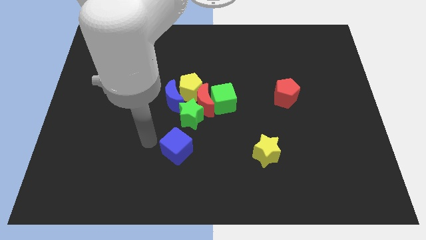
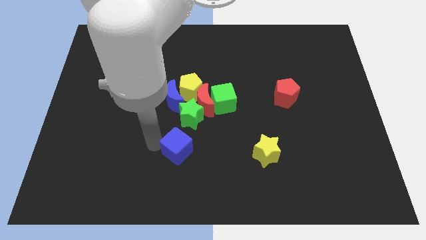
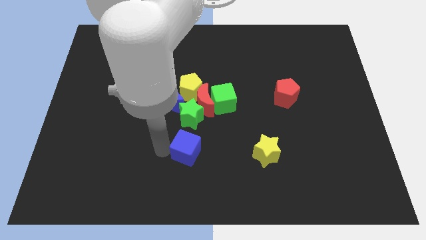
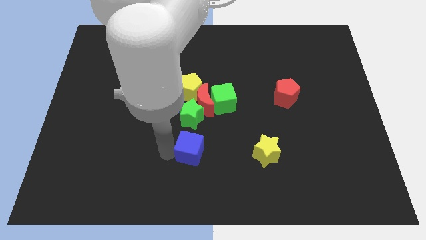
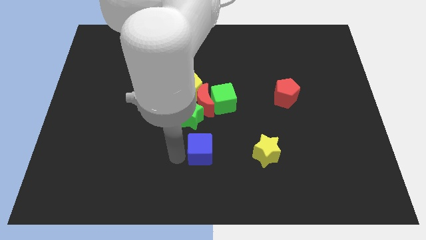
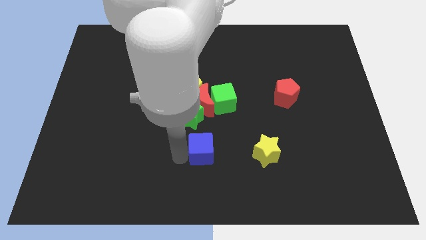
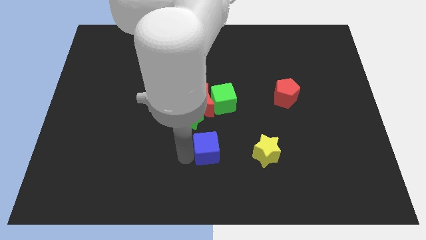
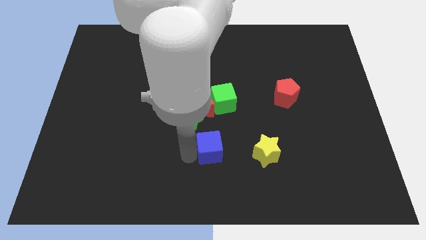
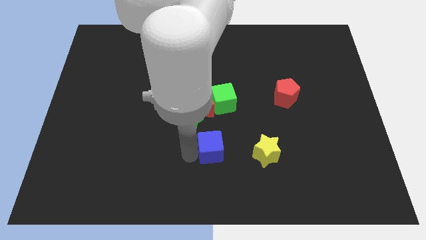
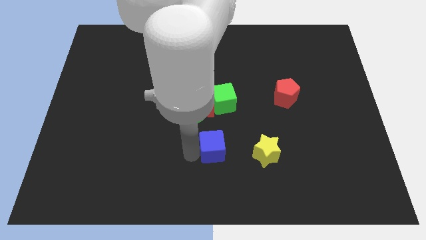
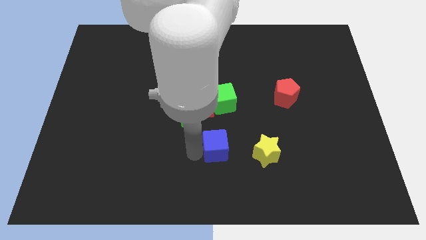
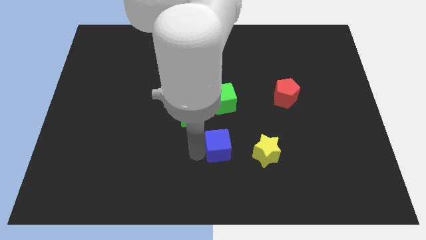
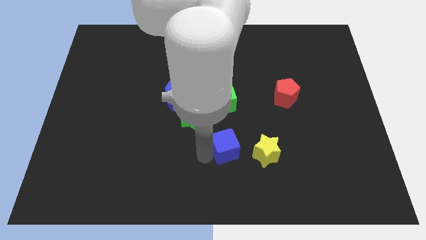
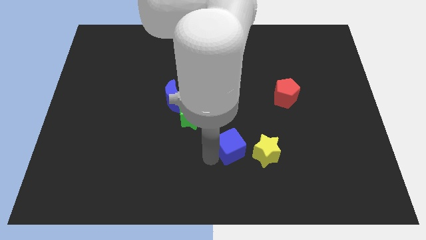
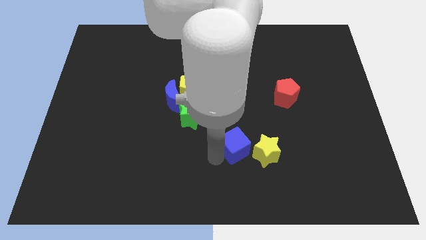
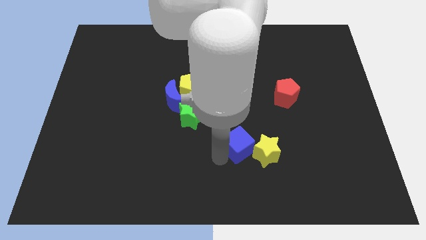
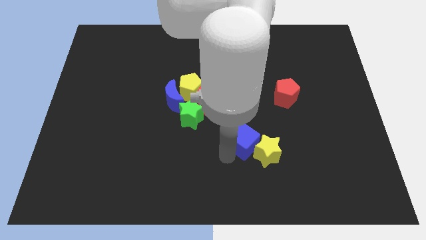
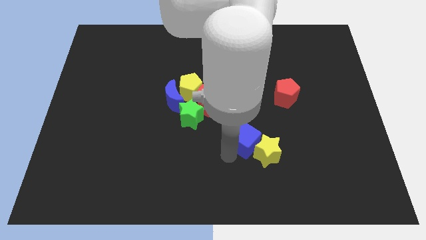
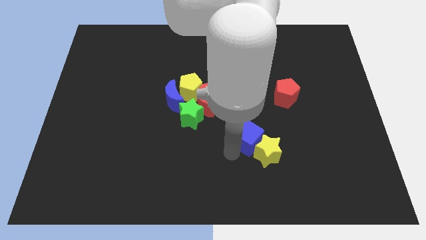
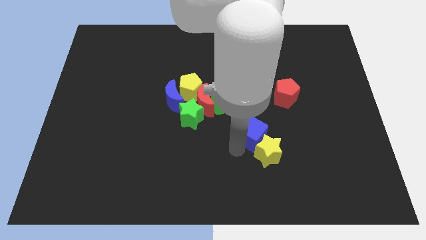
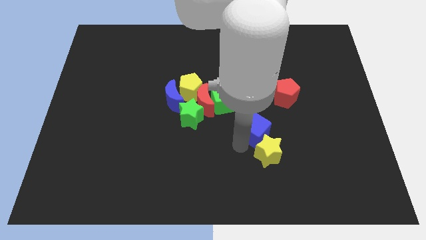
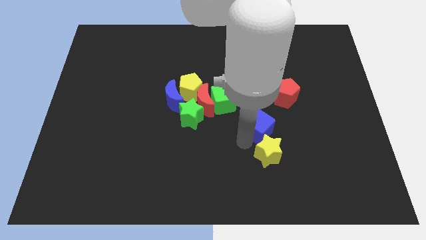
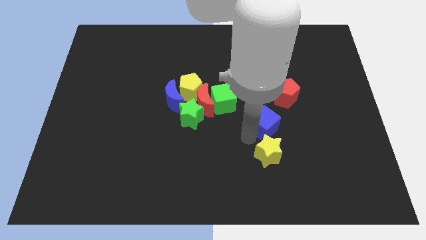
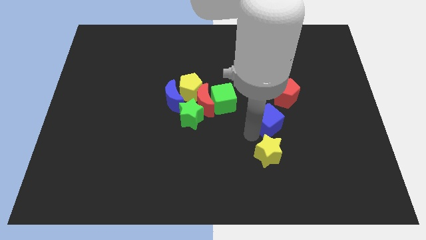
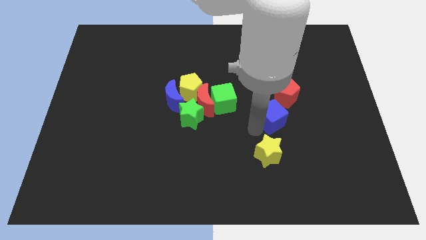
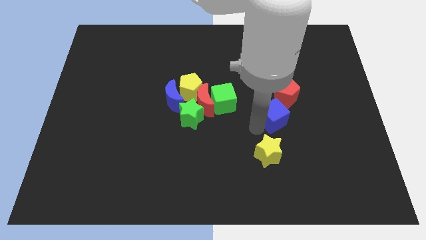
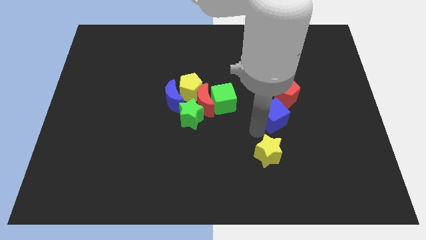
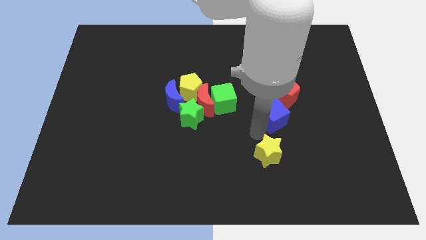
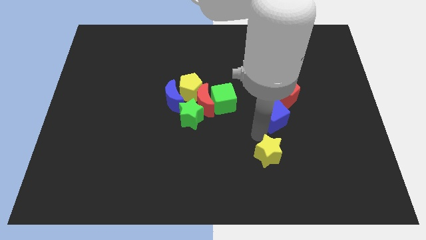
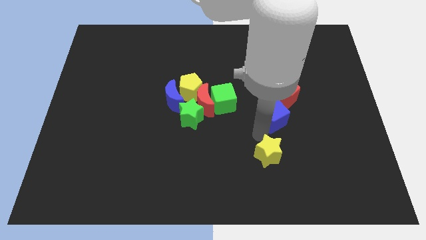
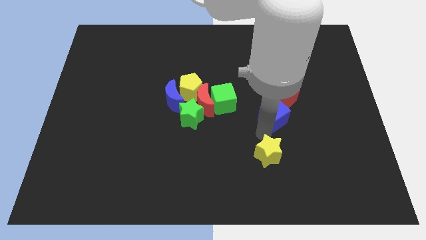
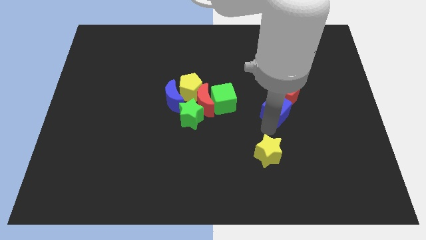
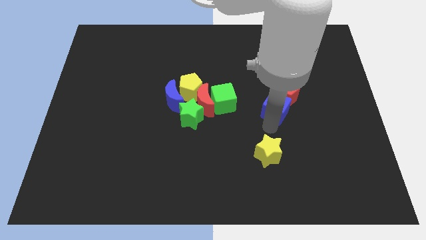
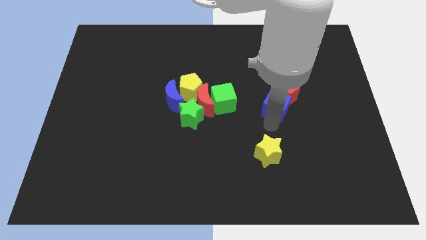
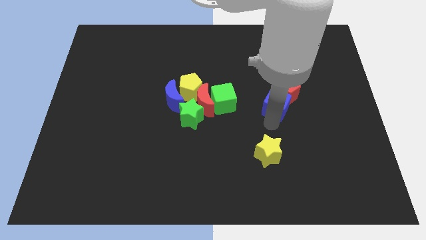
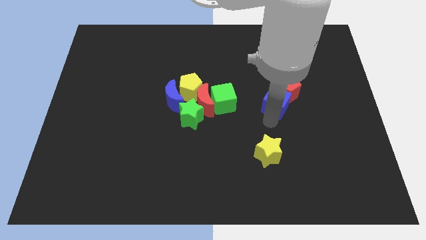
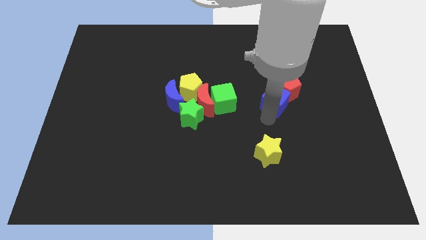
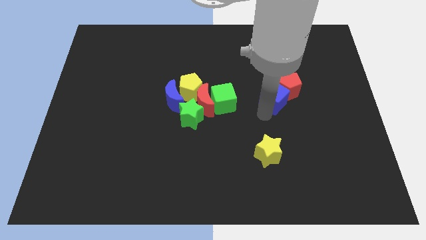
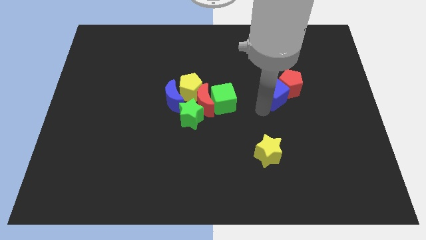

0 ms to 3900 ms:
move the blue cube into the red pentagon

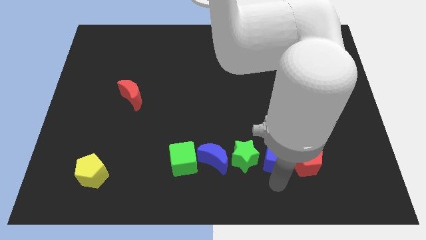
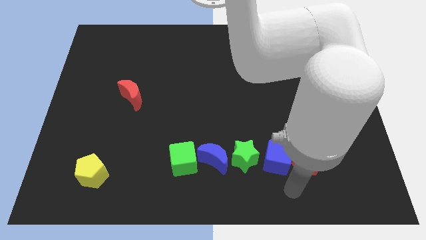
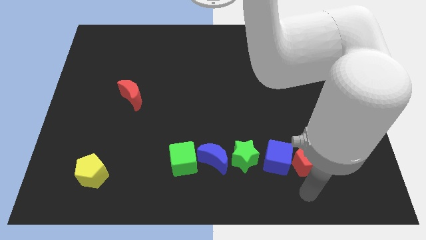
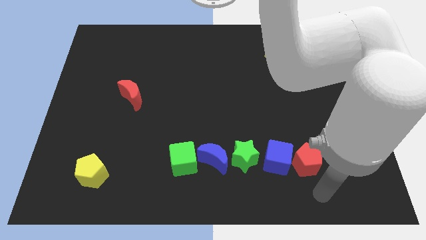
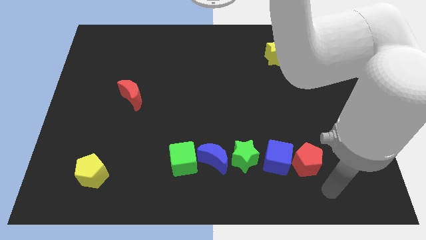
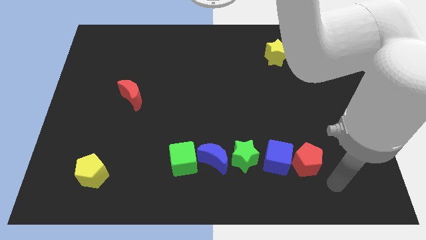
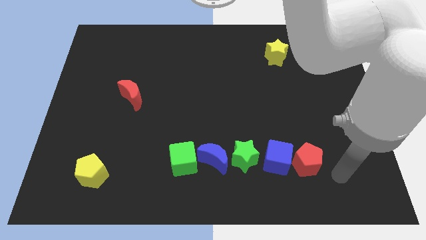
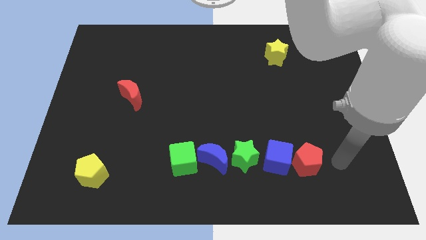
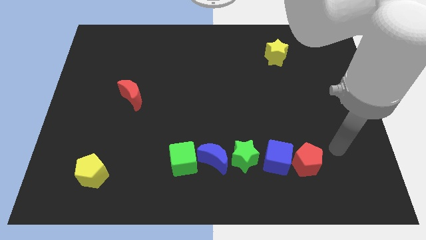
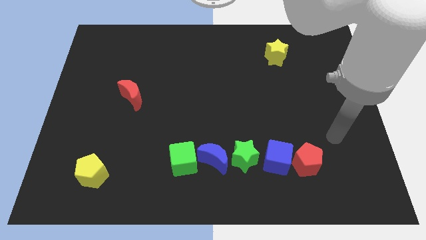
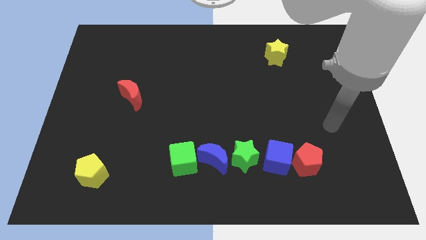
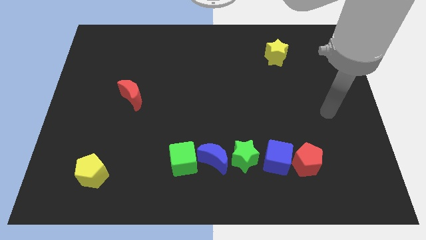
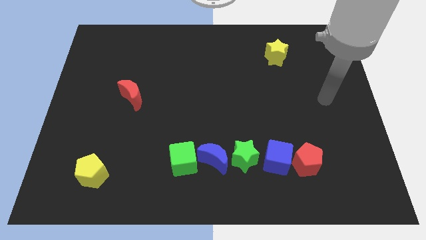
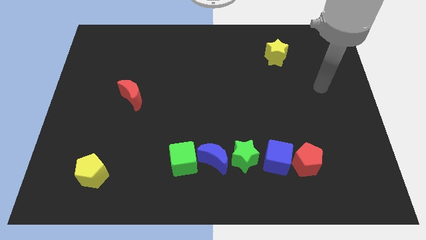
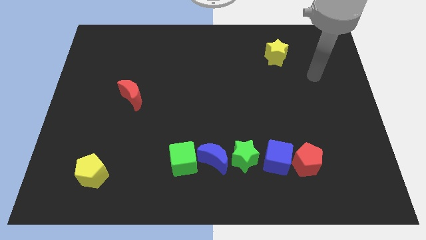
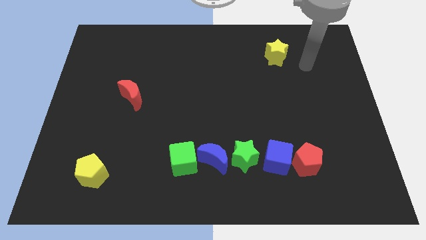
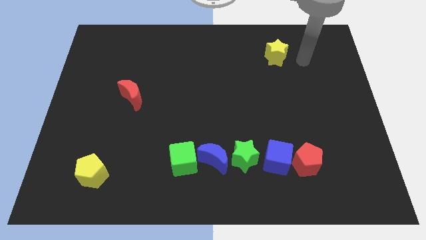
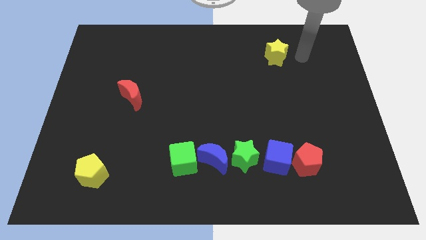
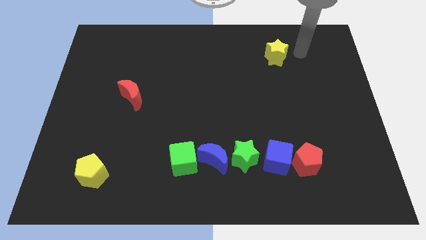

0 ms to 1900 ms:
move the arm near to the yellow star

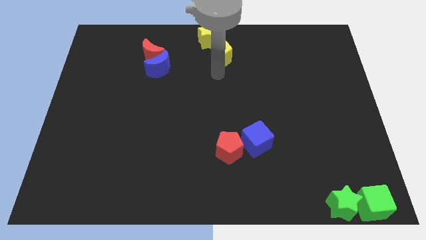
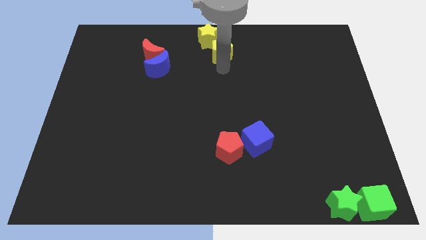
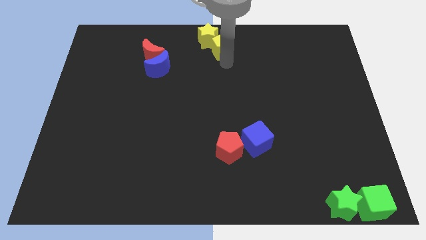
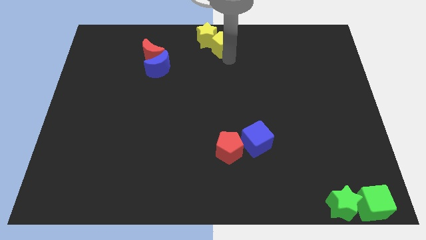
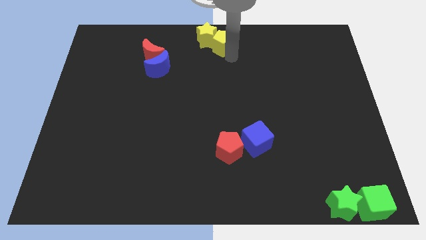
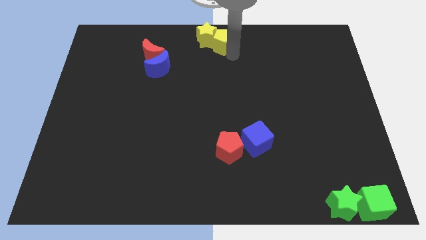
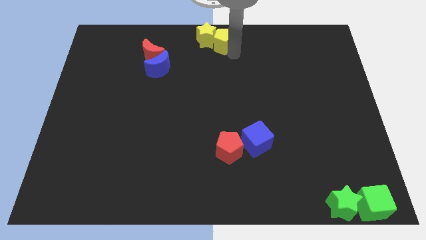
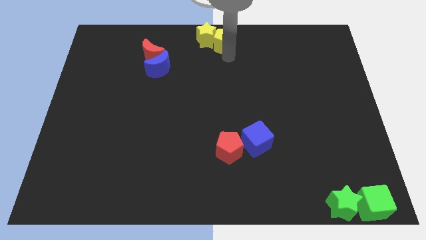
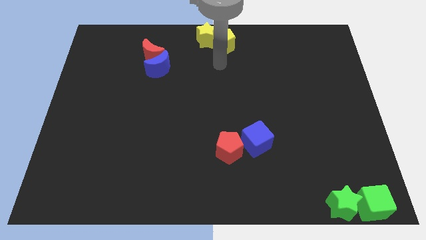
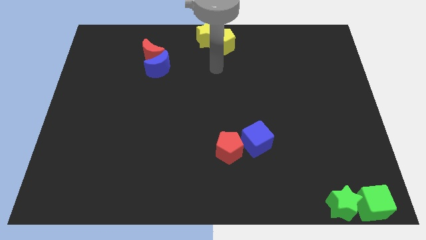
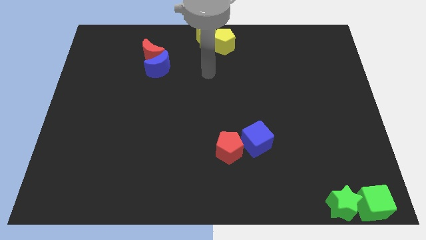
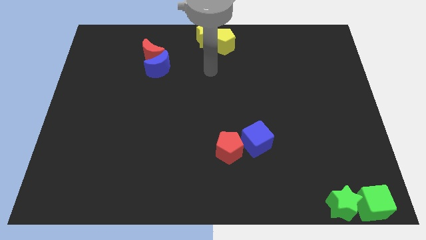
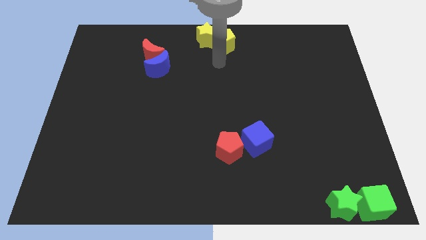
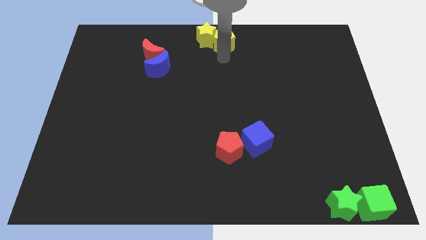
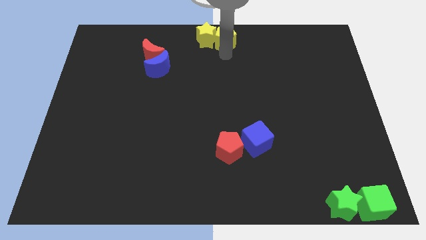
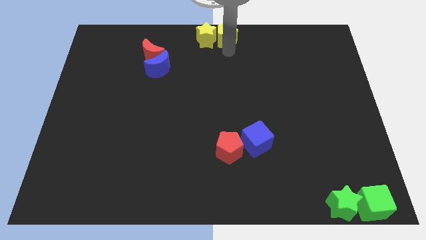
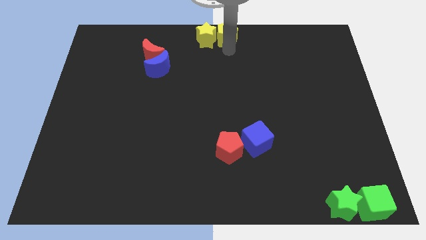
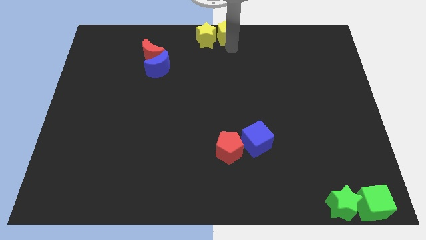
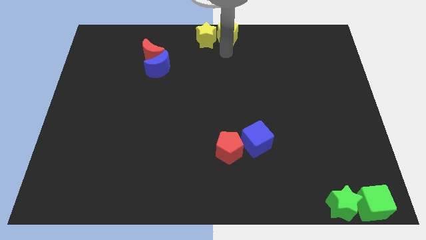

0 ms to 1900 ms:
place the yellow pentagon right to the yellow star

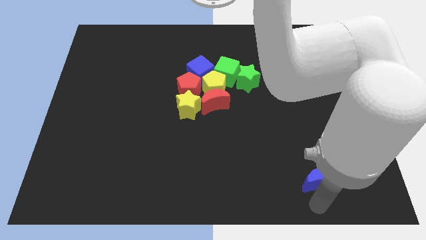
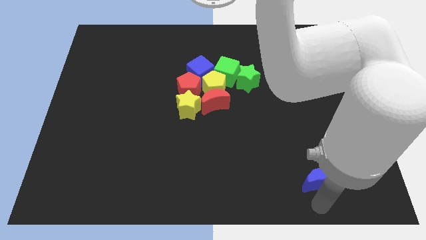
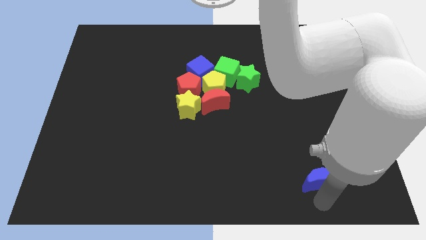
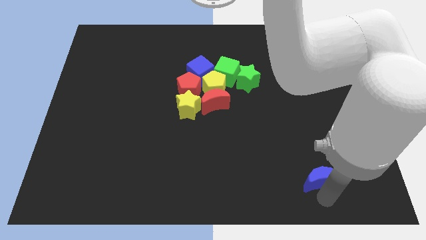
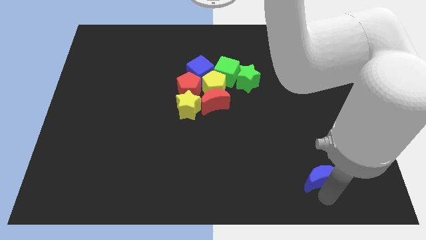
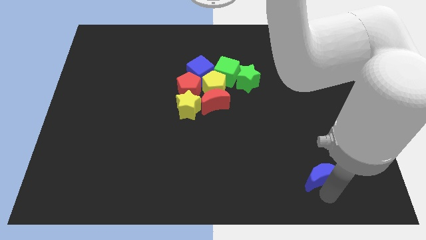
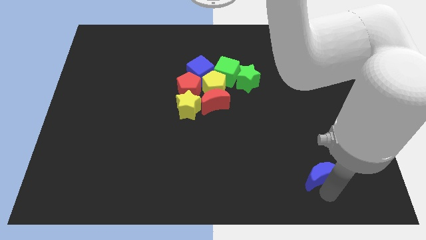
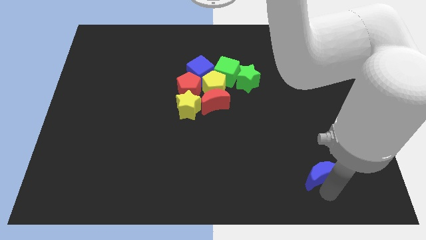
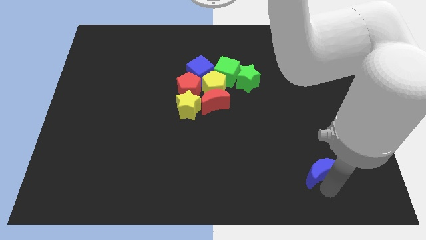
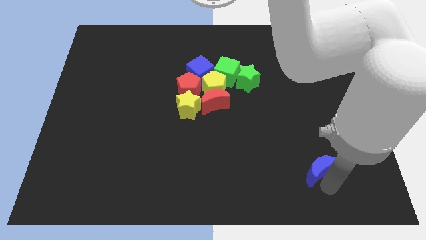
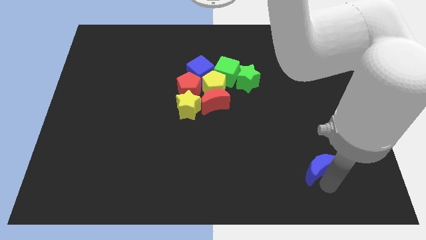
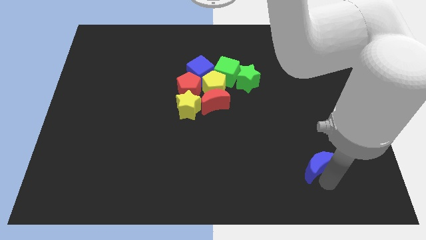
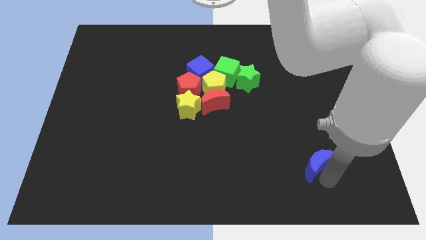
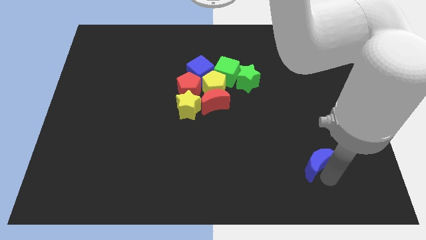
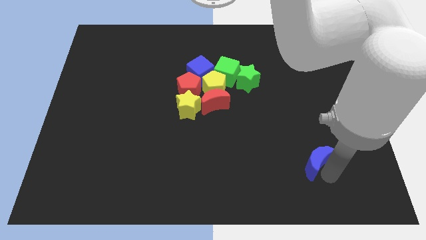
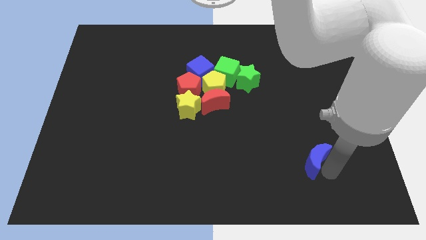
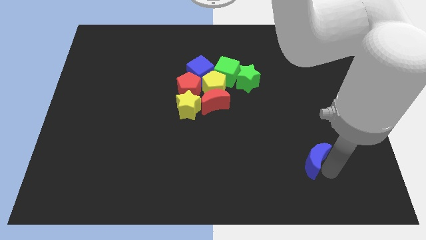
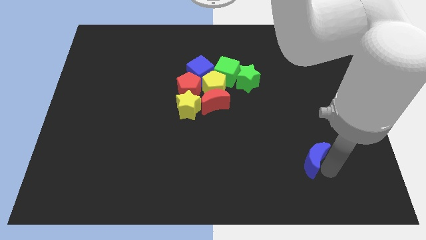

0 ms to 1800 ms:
move the blue crescent slightly towards the group of blocks
